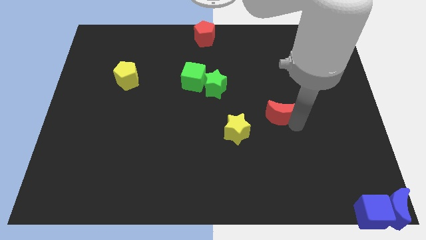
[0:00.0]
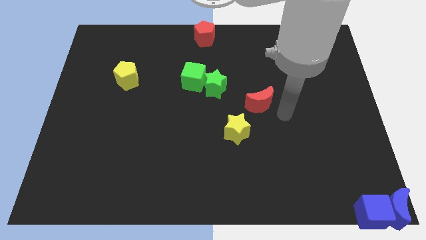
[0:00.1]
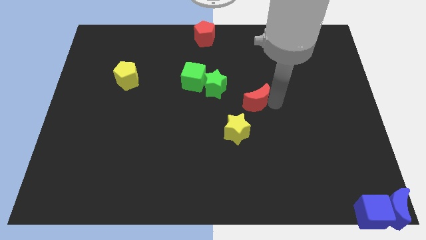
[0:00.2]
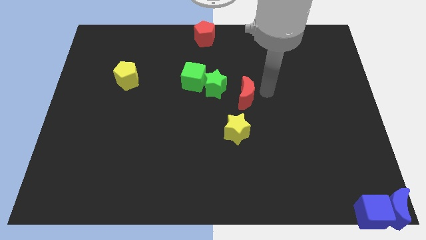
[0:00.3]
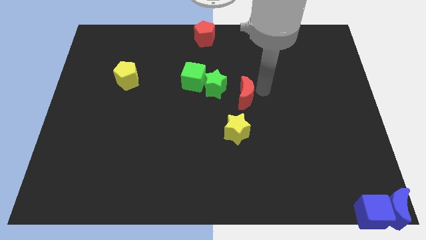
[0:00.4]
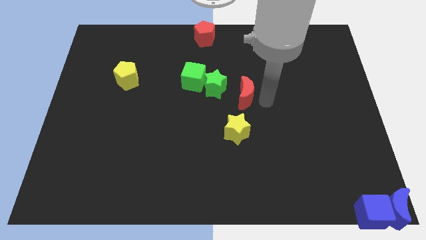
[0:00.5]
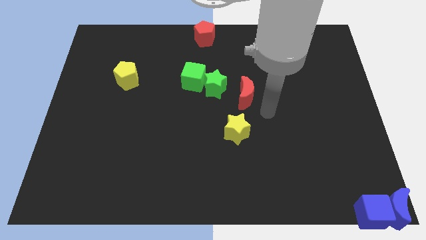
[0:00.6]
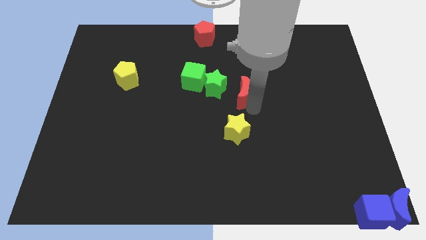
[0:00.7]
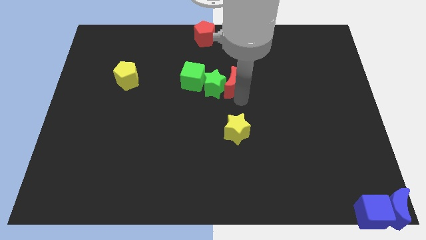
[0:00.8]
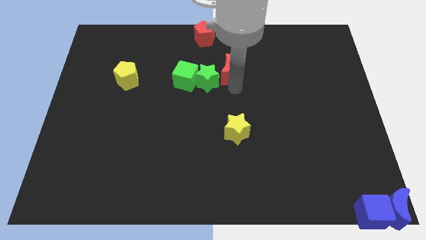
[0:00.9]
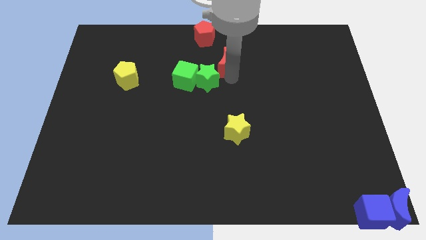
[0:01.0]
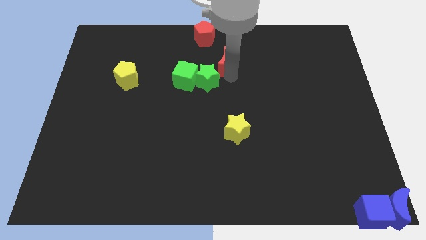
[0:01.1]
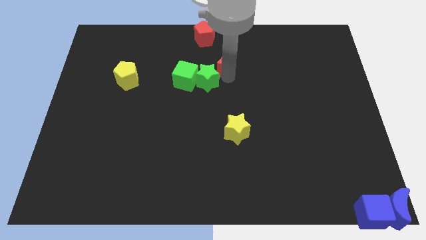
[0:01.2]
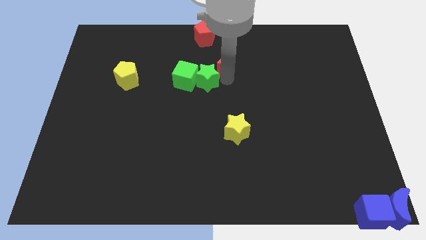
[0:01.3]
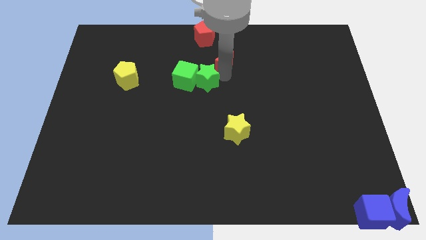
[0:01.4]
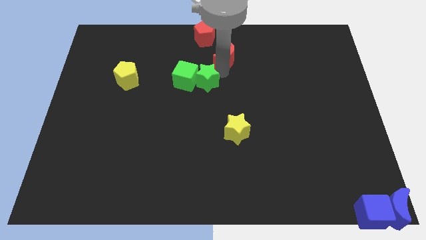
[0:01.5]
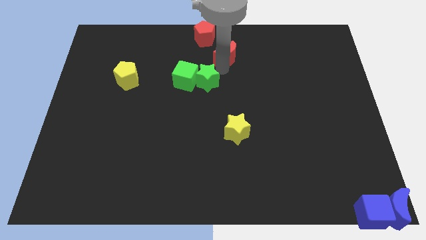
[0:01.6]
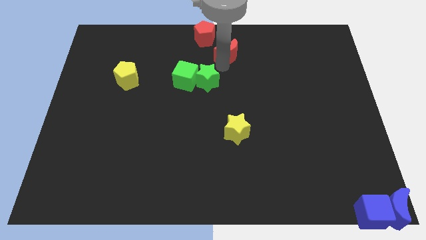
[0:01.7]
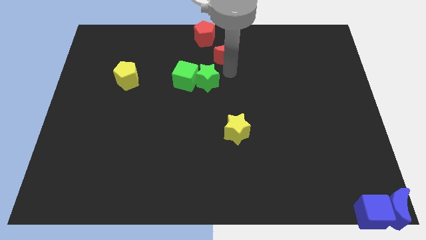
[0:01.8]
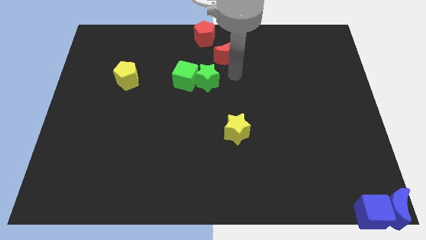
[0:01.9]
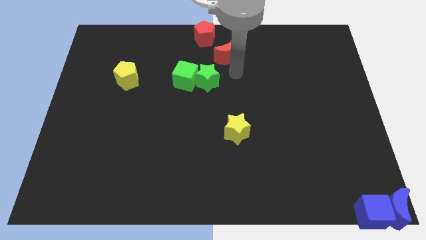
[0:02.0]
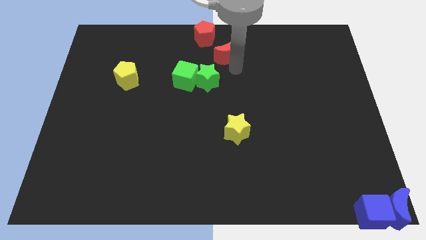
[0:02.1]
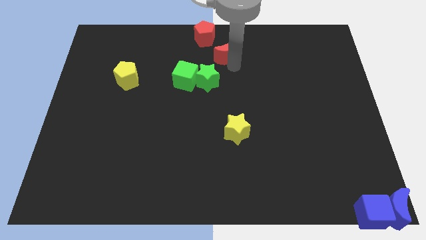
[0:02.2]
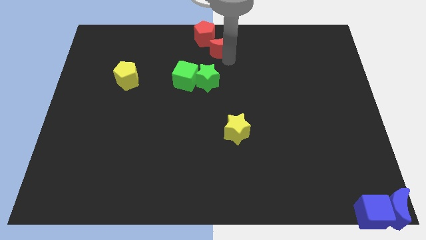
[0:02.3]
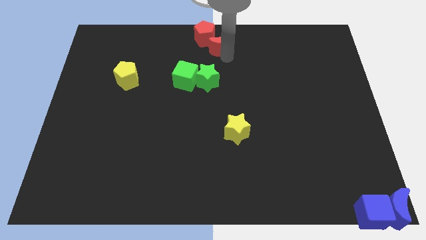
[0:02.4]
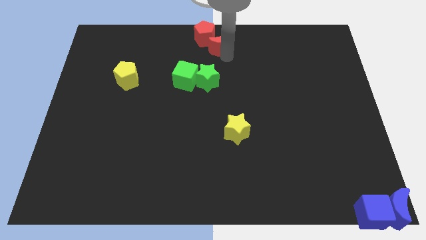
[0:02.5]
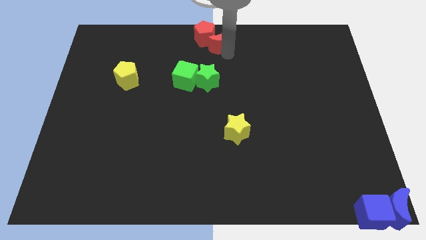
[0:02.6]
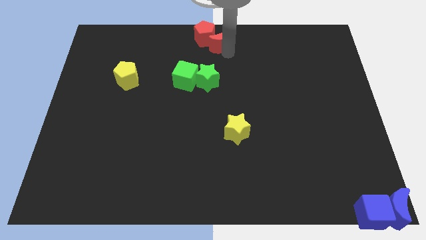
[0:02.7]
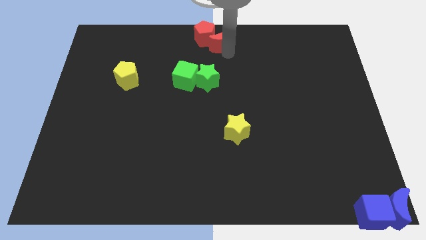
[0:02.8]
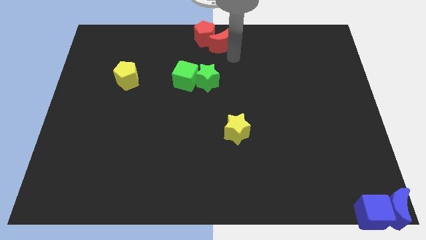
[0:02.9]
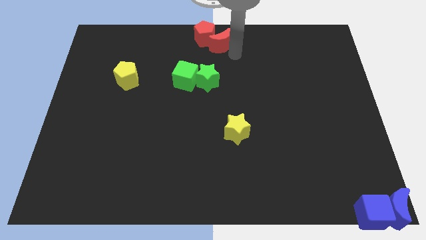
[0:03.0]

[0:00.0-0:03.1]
move red moon towards top center of the board

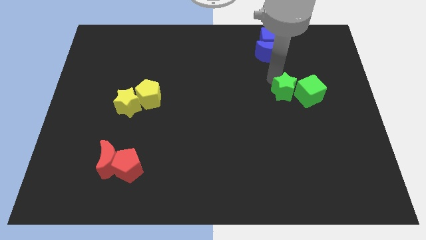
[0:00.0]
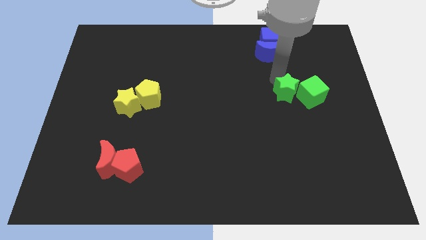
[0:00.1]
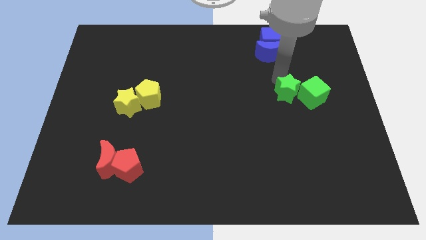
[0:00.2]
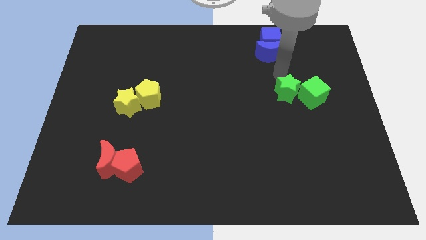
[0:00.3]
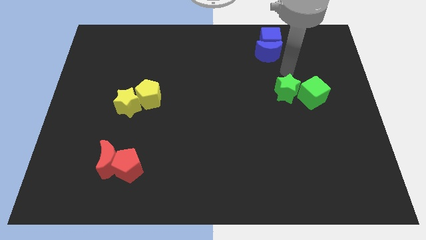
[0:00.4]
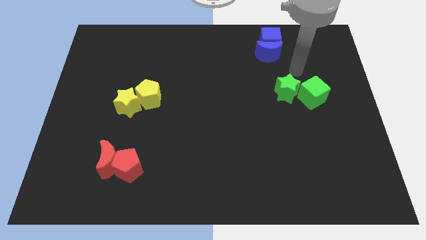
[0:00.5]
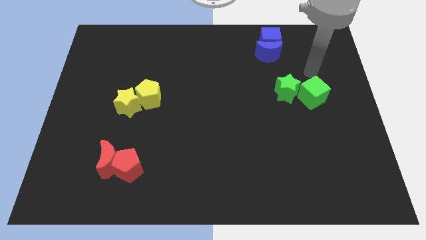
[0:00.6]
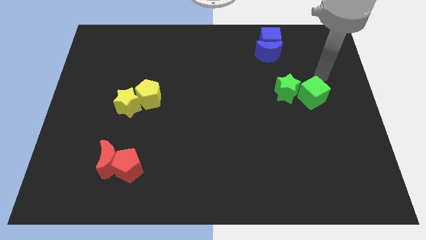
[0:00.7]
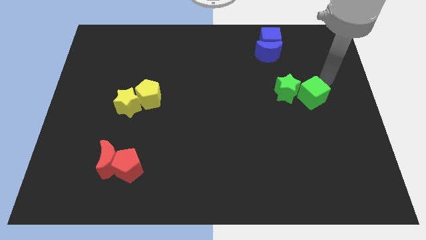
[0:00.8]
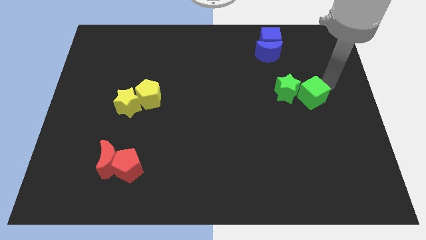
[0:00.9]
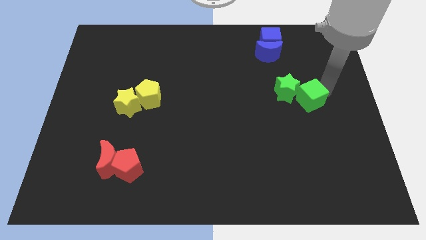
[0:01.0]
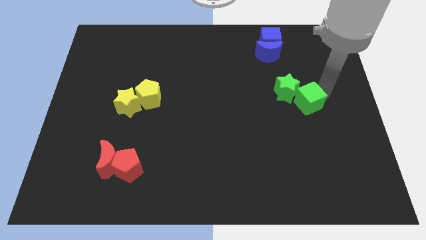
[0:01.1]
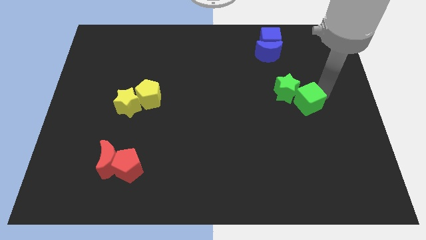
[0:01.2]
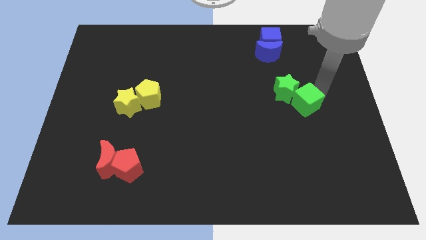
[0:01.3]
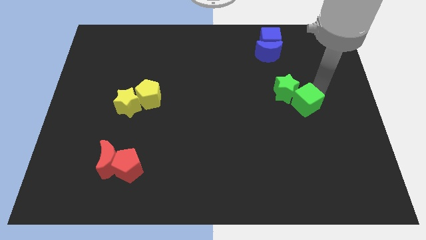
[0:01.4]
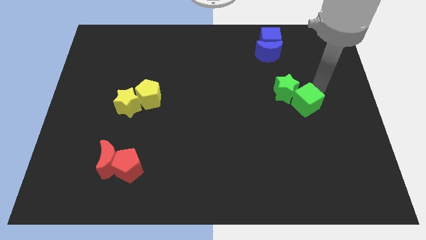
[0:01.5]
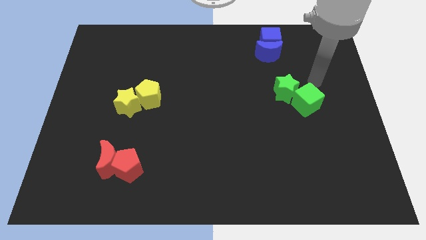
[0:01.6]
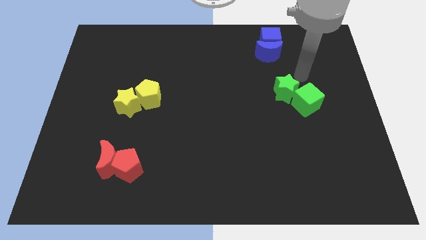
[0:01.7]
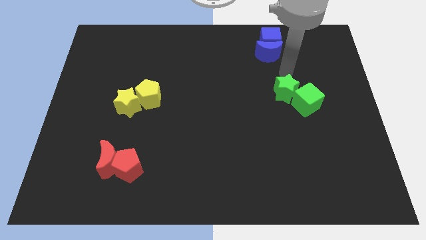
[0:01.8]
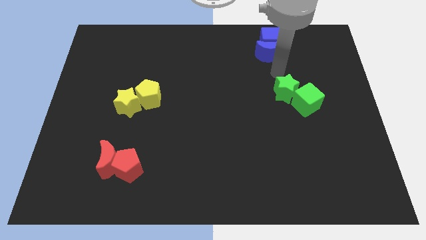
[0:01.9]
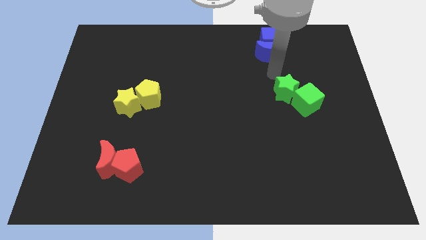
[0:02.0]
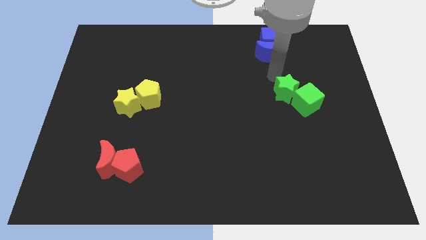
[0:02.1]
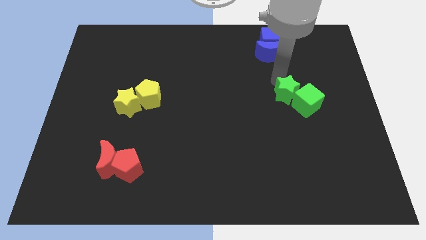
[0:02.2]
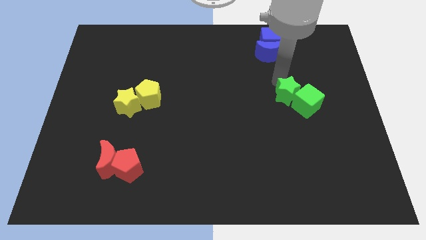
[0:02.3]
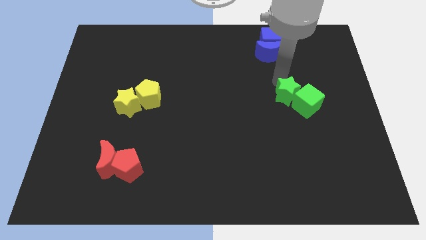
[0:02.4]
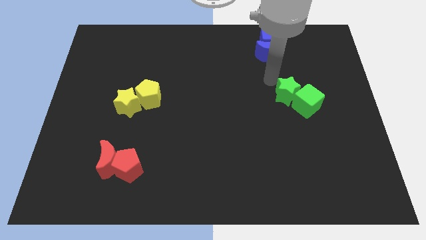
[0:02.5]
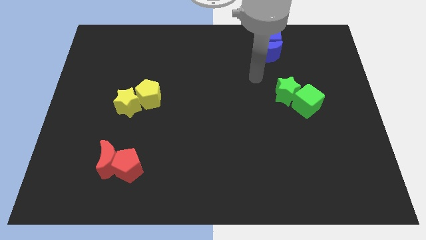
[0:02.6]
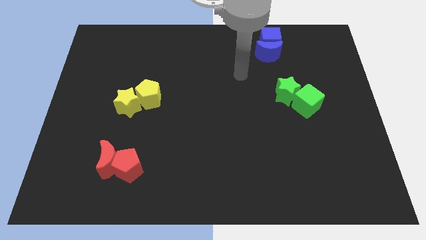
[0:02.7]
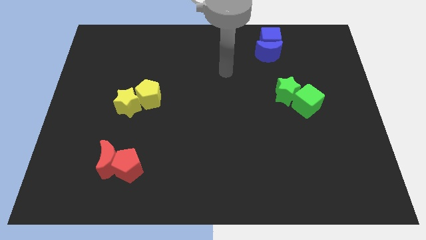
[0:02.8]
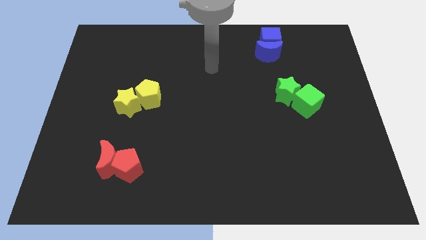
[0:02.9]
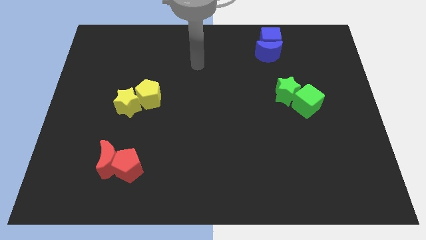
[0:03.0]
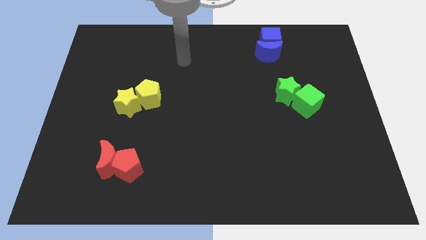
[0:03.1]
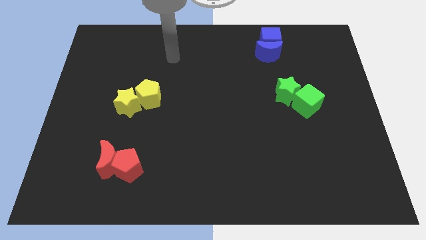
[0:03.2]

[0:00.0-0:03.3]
move your arm away from the green blocks

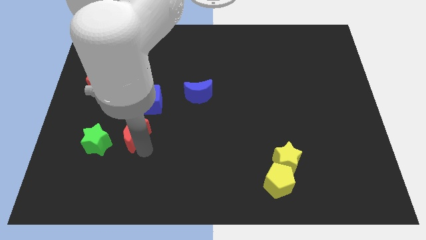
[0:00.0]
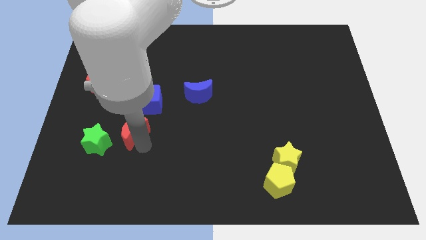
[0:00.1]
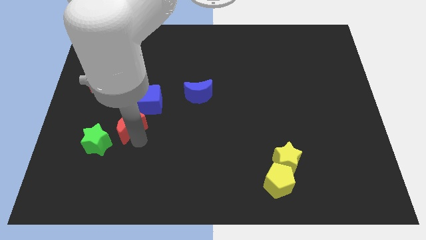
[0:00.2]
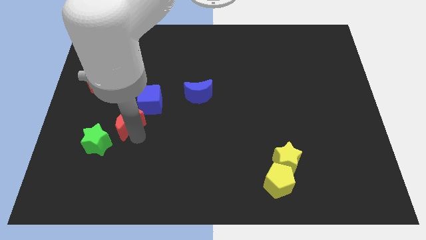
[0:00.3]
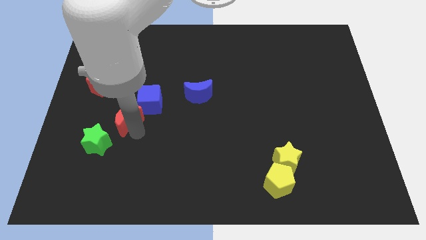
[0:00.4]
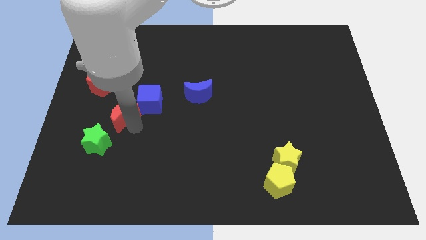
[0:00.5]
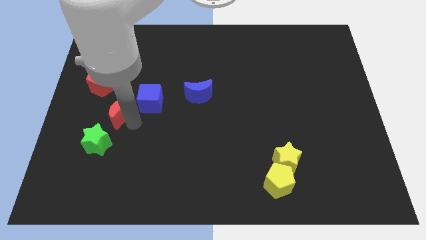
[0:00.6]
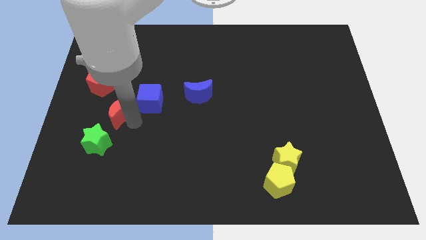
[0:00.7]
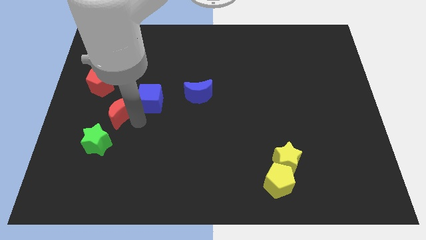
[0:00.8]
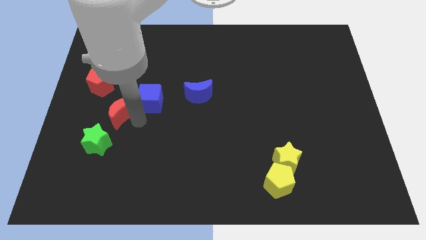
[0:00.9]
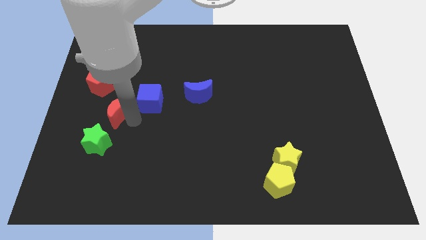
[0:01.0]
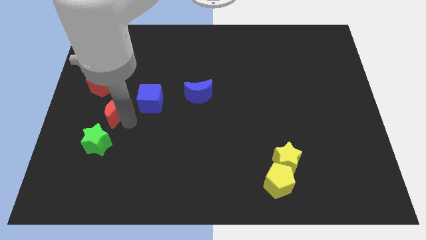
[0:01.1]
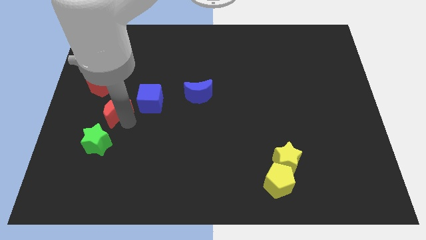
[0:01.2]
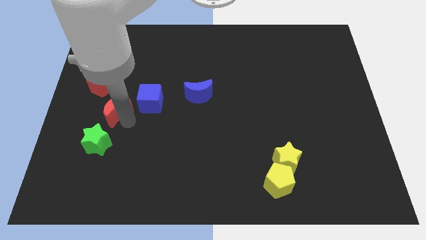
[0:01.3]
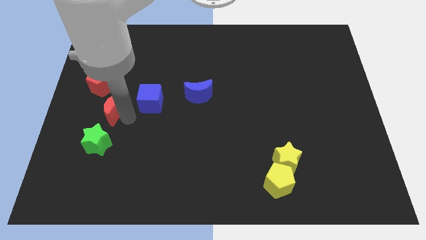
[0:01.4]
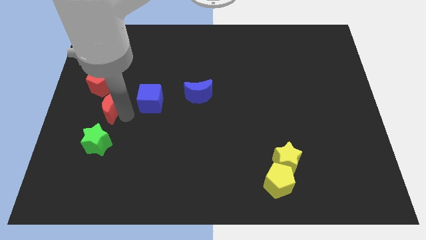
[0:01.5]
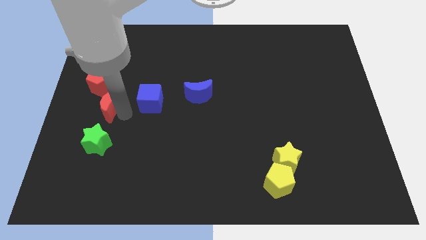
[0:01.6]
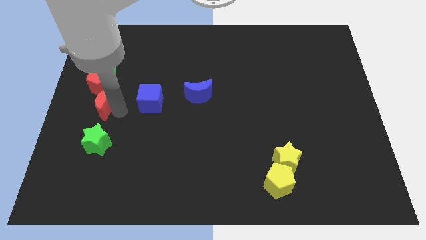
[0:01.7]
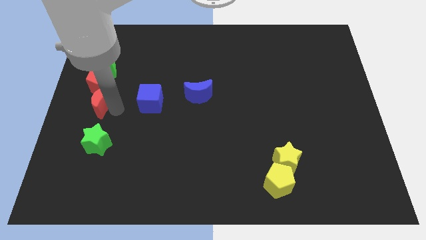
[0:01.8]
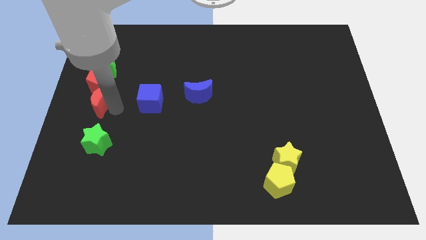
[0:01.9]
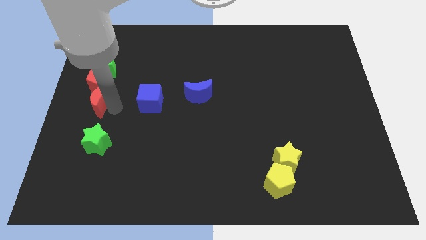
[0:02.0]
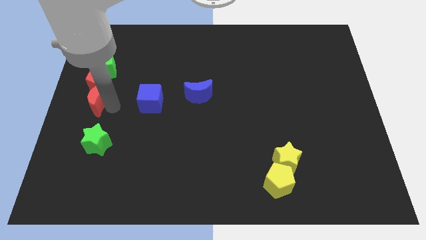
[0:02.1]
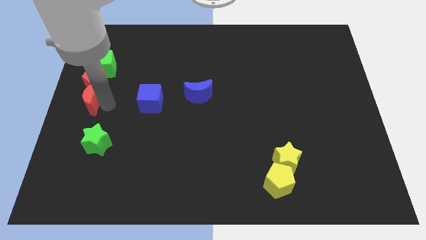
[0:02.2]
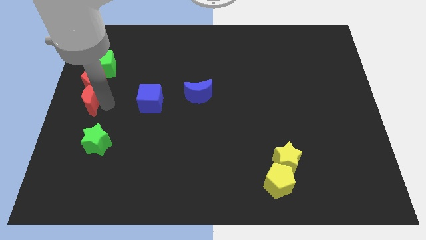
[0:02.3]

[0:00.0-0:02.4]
move the red crescent to the bottom side of the red pentagon
